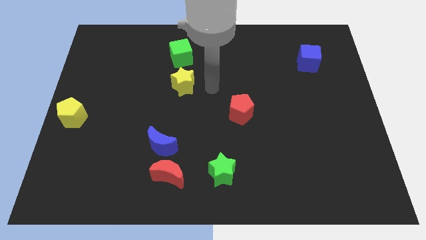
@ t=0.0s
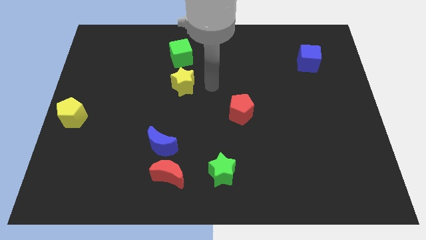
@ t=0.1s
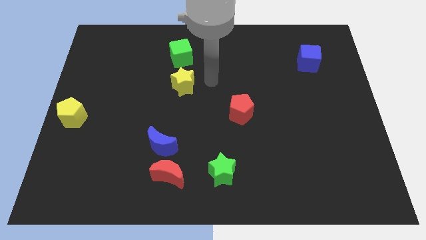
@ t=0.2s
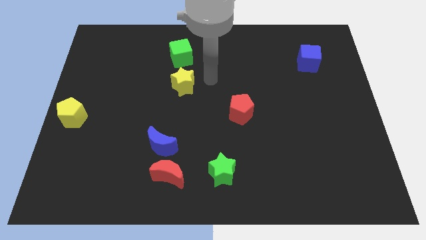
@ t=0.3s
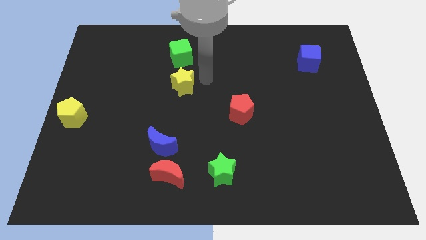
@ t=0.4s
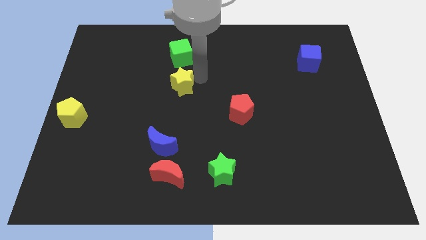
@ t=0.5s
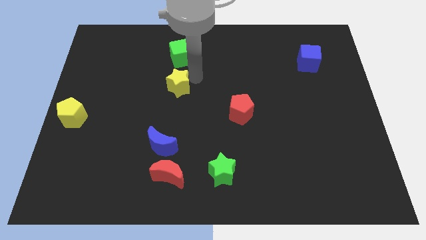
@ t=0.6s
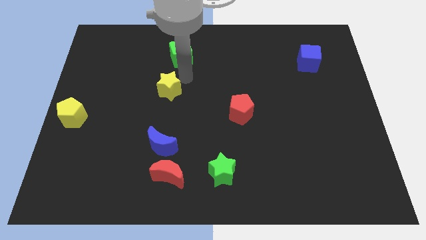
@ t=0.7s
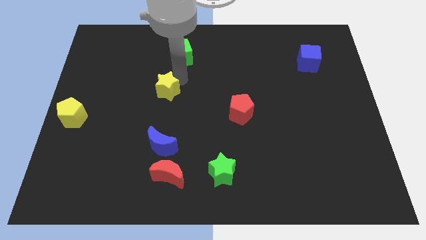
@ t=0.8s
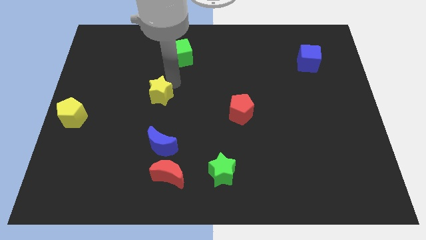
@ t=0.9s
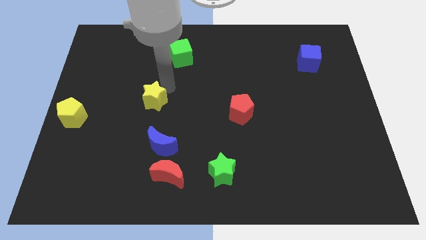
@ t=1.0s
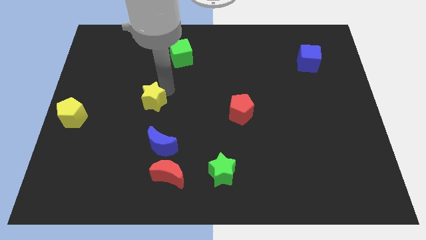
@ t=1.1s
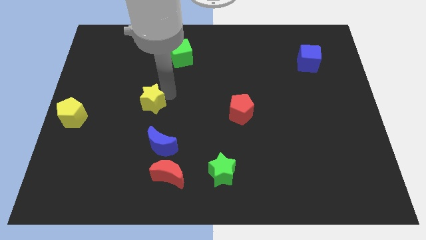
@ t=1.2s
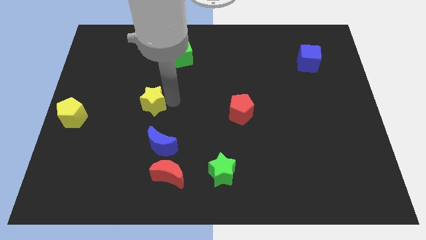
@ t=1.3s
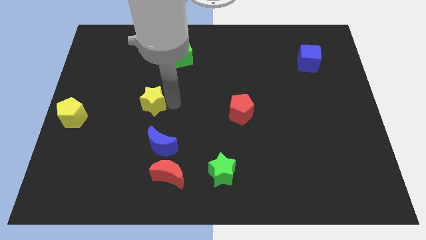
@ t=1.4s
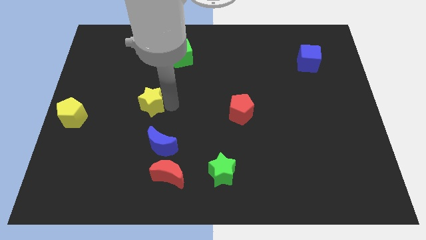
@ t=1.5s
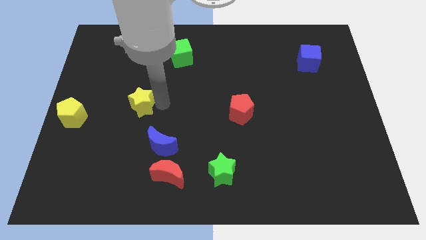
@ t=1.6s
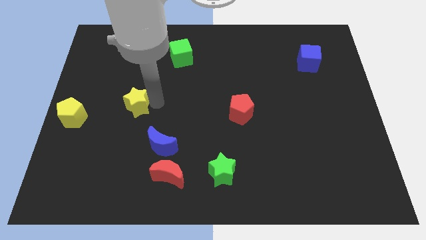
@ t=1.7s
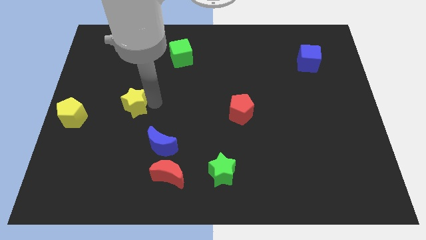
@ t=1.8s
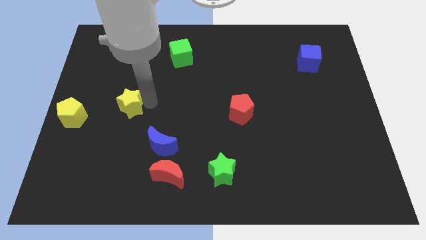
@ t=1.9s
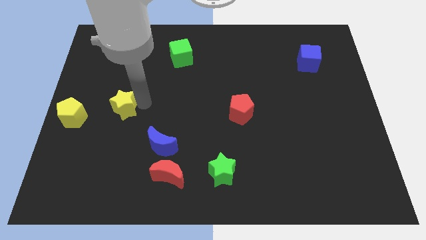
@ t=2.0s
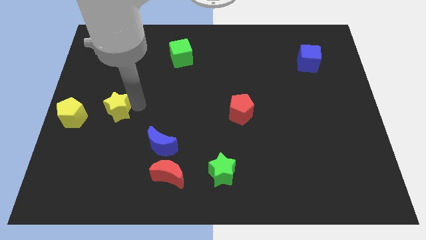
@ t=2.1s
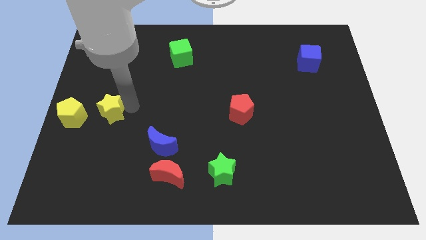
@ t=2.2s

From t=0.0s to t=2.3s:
place the yellow star to the right of yellow pentagon

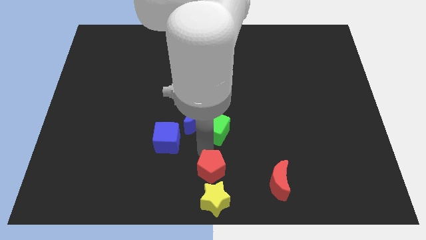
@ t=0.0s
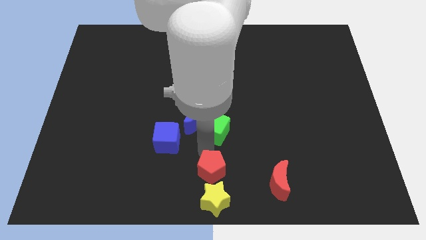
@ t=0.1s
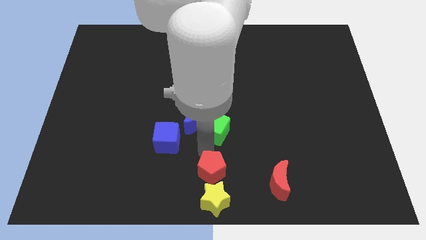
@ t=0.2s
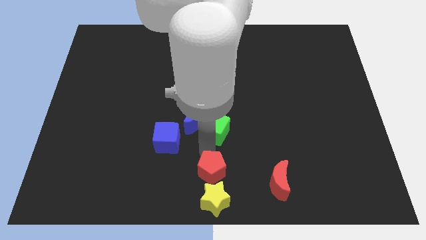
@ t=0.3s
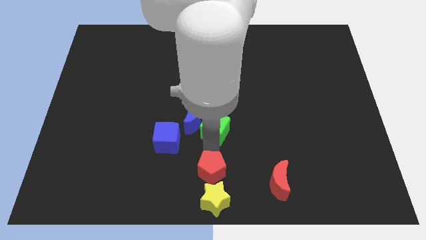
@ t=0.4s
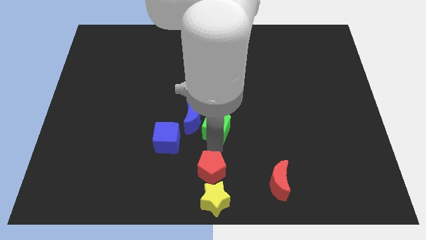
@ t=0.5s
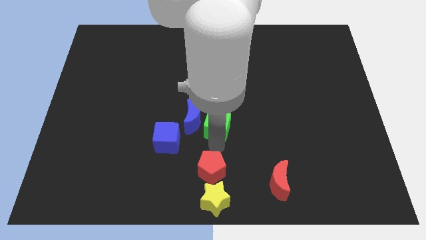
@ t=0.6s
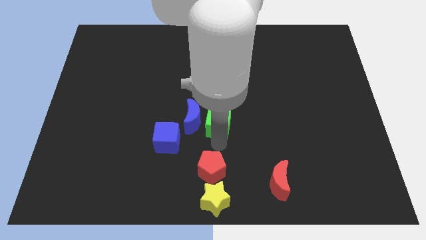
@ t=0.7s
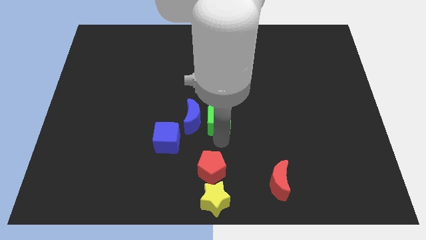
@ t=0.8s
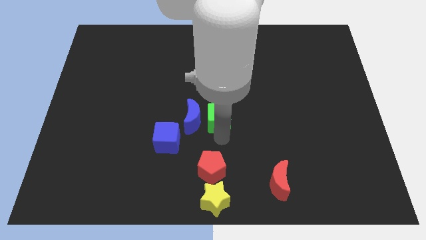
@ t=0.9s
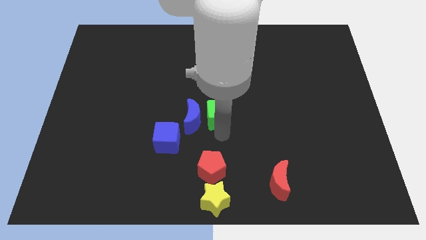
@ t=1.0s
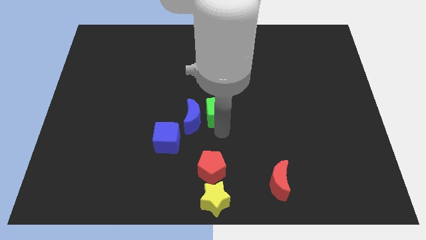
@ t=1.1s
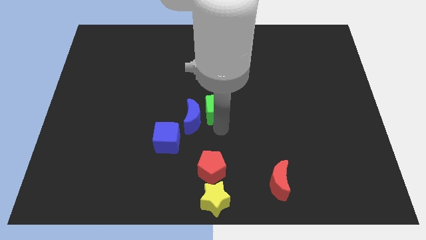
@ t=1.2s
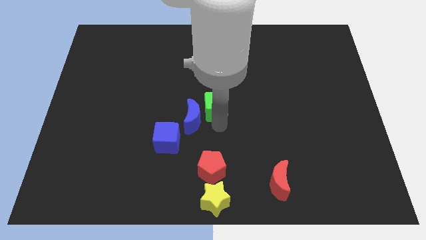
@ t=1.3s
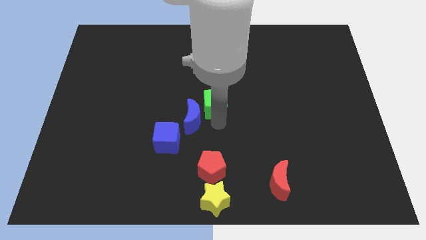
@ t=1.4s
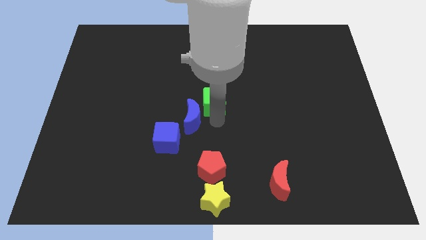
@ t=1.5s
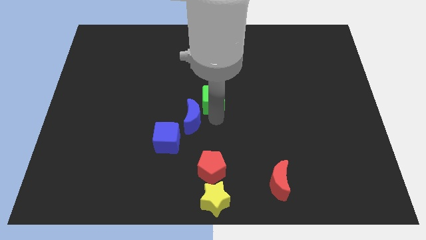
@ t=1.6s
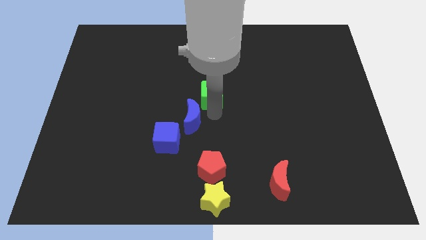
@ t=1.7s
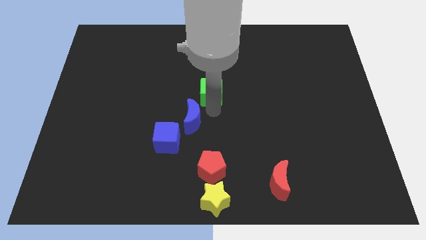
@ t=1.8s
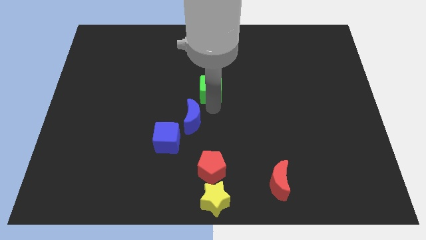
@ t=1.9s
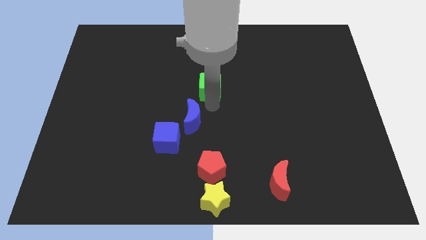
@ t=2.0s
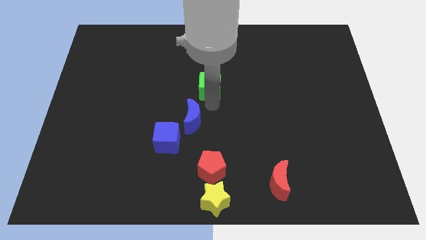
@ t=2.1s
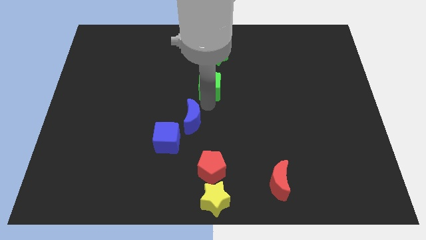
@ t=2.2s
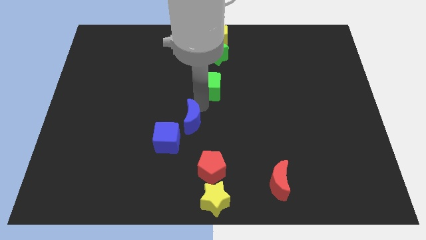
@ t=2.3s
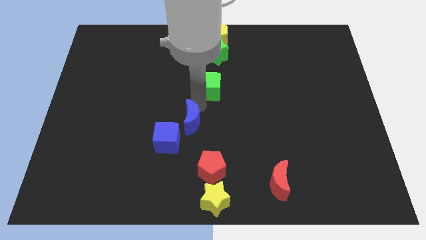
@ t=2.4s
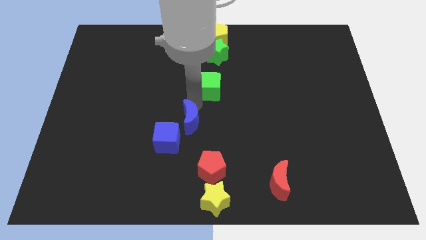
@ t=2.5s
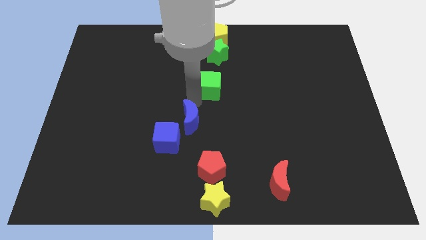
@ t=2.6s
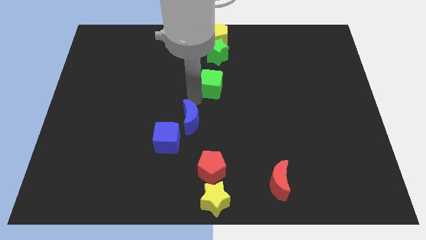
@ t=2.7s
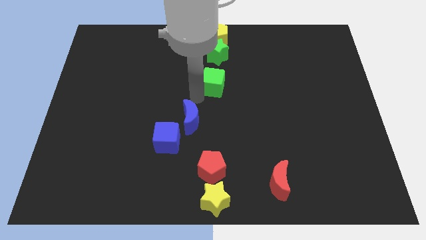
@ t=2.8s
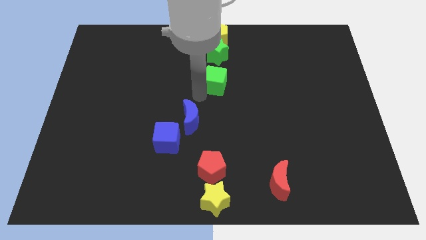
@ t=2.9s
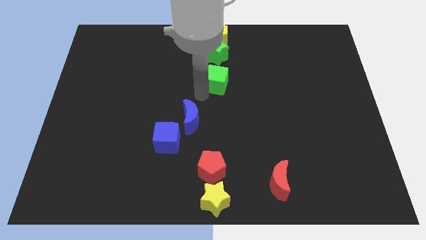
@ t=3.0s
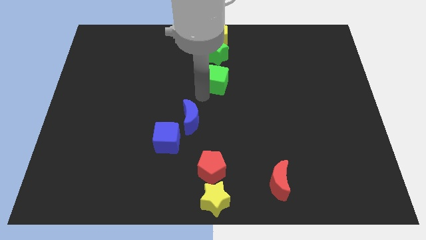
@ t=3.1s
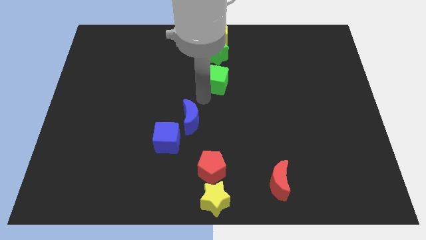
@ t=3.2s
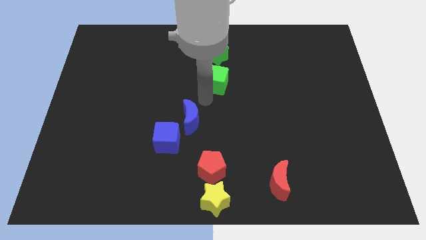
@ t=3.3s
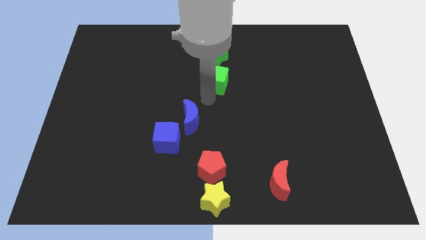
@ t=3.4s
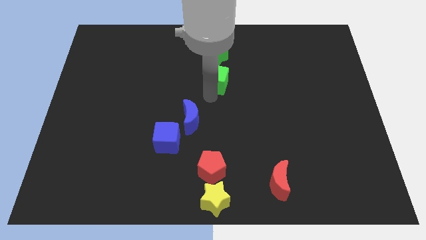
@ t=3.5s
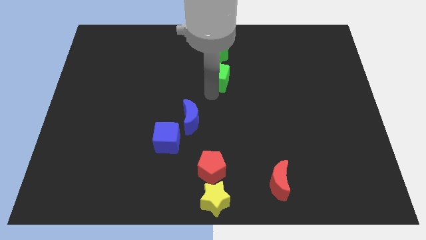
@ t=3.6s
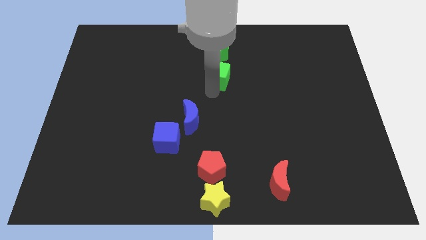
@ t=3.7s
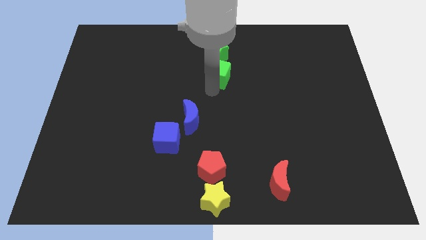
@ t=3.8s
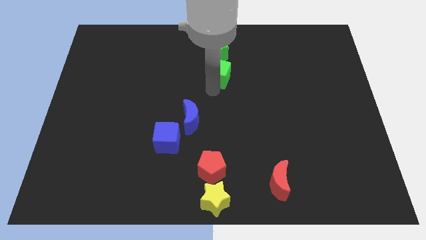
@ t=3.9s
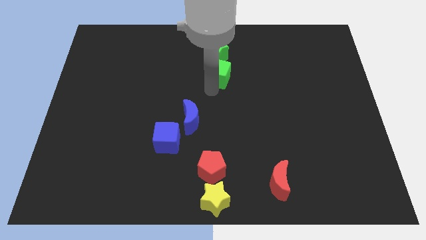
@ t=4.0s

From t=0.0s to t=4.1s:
place the green cube below green star

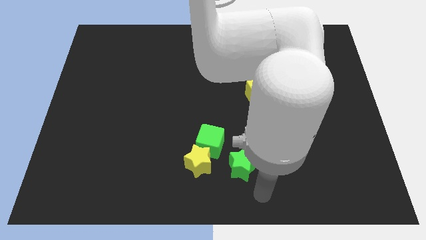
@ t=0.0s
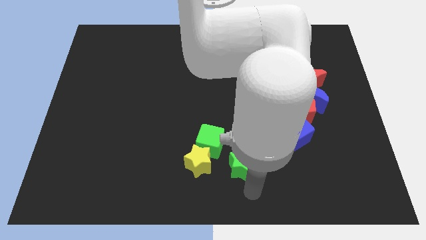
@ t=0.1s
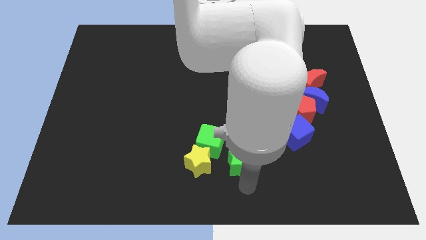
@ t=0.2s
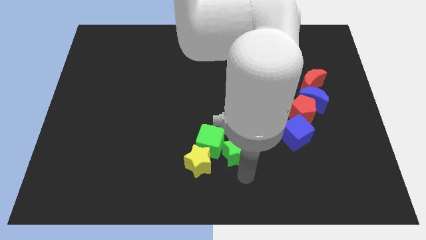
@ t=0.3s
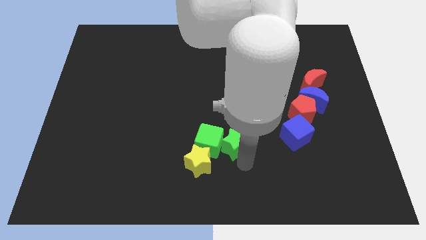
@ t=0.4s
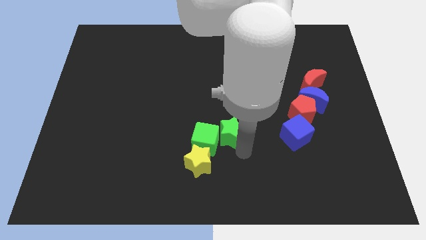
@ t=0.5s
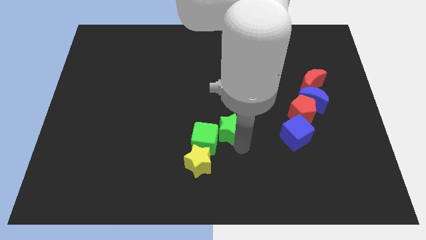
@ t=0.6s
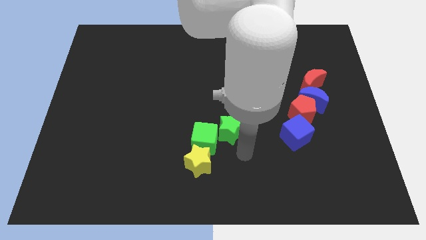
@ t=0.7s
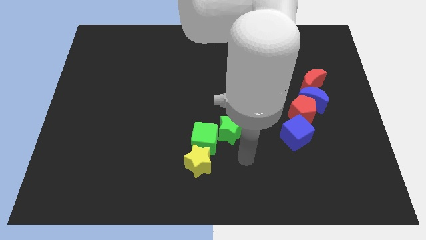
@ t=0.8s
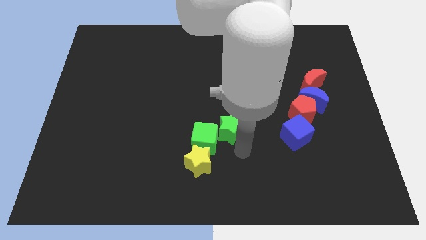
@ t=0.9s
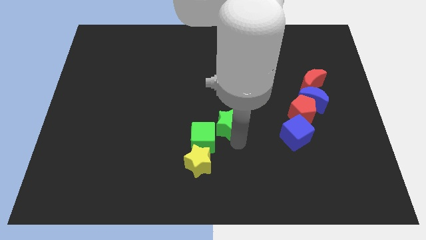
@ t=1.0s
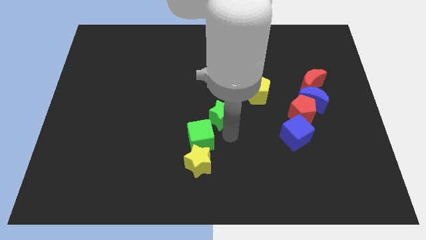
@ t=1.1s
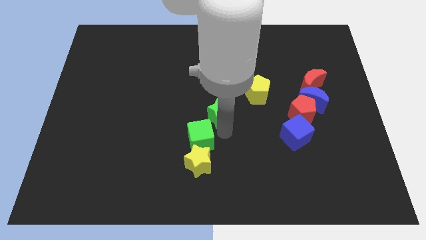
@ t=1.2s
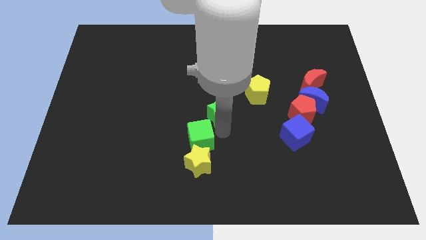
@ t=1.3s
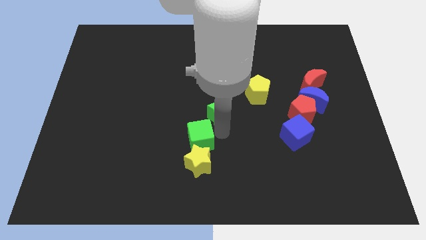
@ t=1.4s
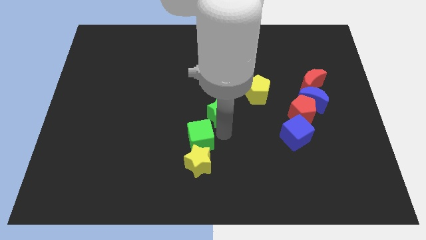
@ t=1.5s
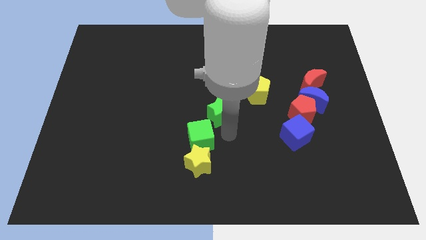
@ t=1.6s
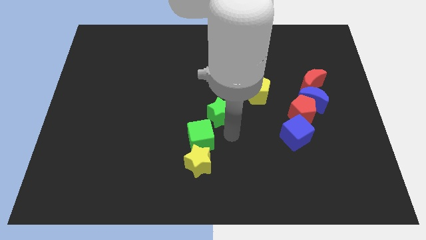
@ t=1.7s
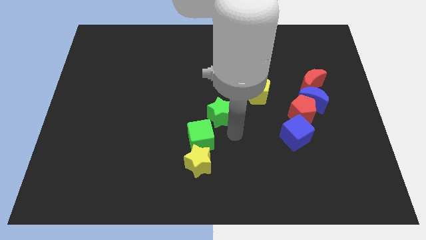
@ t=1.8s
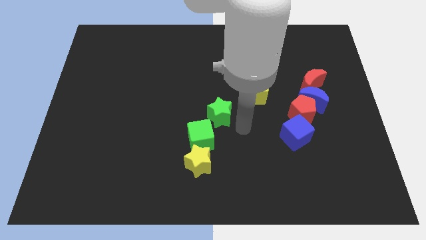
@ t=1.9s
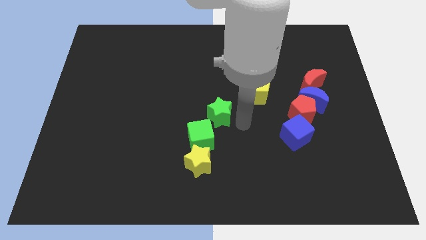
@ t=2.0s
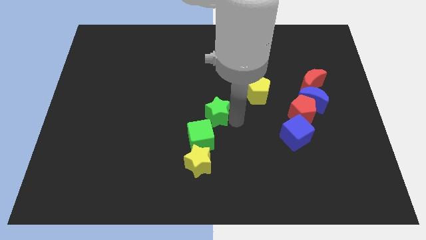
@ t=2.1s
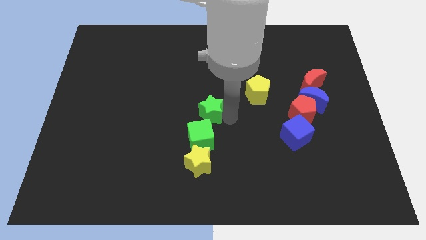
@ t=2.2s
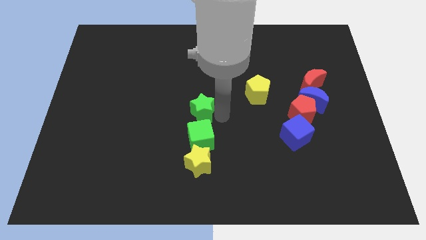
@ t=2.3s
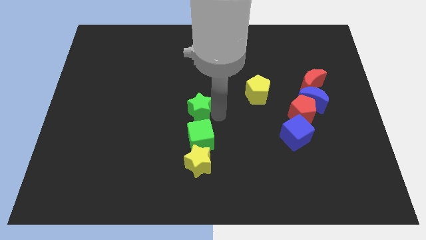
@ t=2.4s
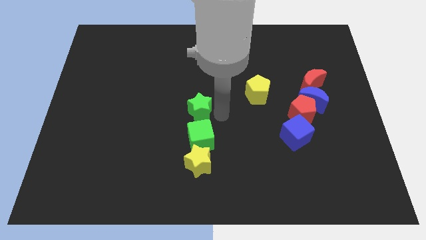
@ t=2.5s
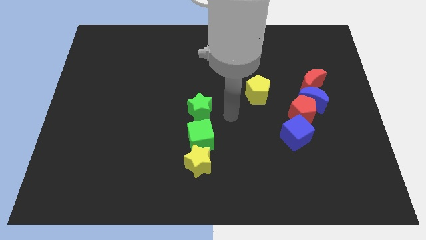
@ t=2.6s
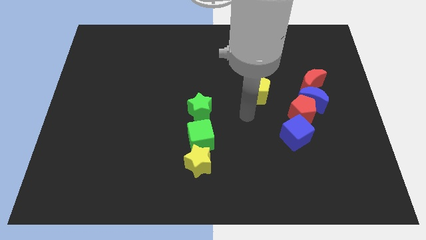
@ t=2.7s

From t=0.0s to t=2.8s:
place the green star above the green cube
